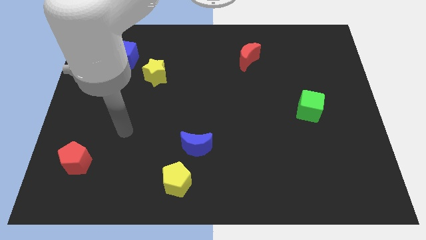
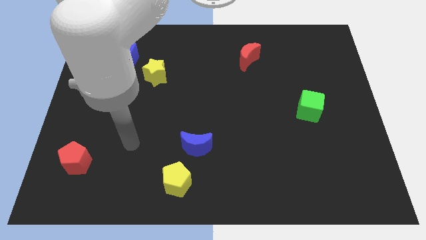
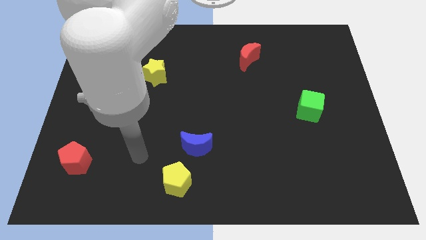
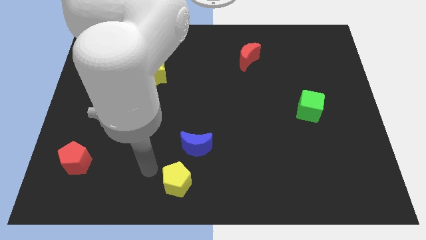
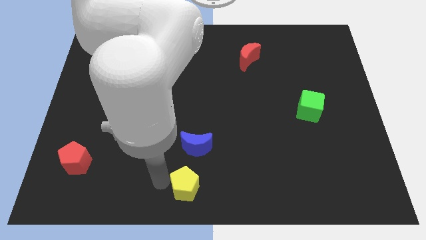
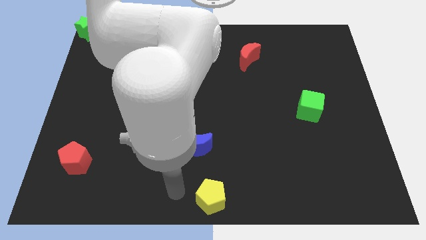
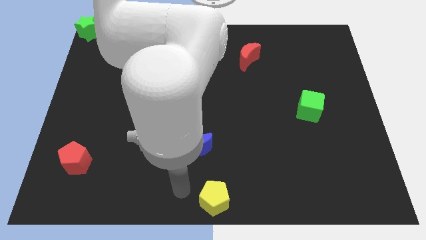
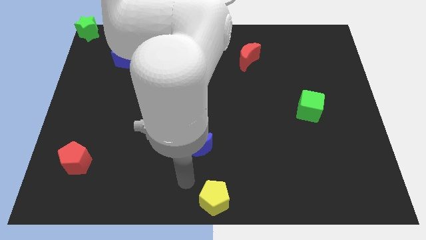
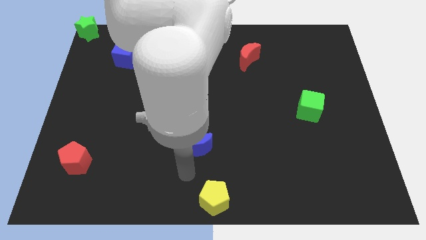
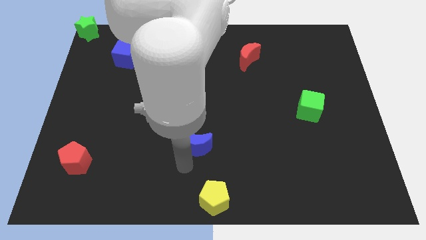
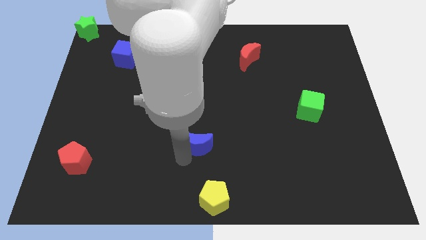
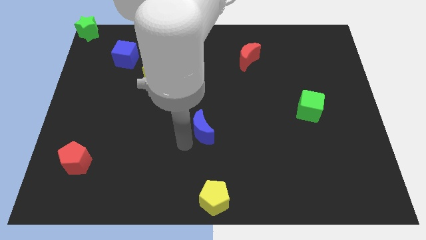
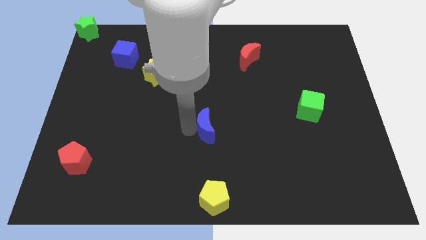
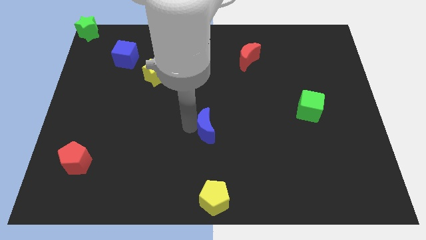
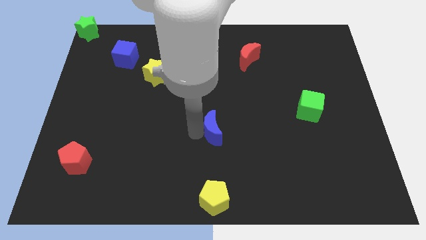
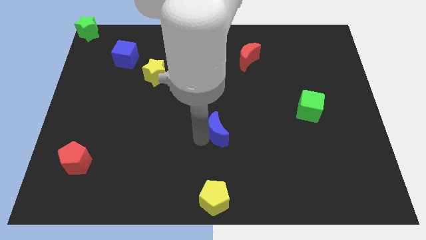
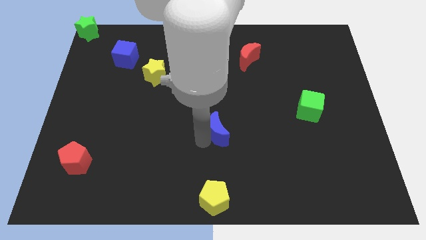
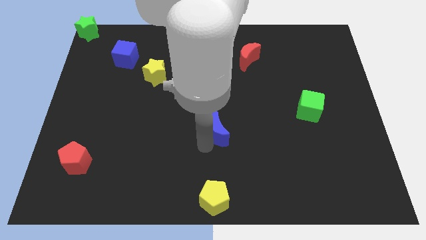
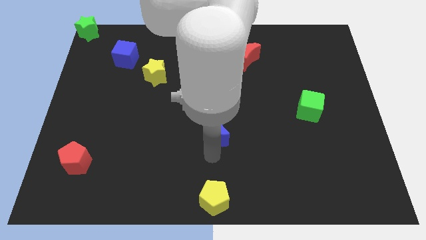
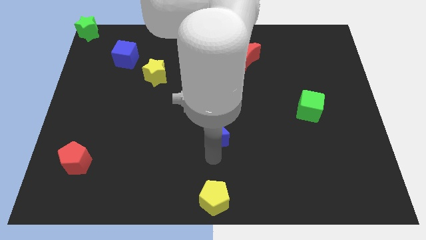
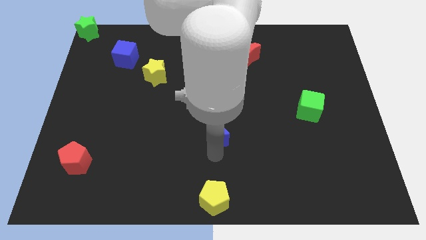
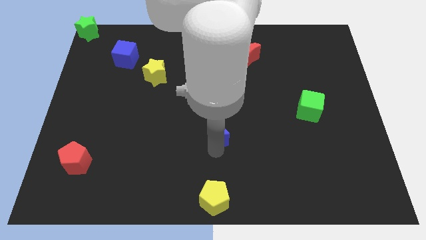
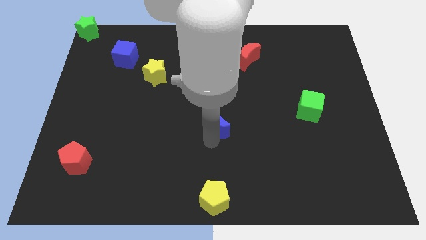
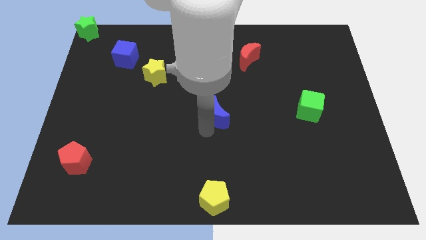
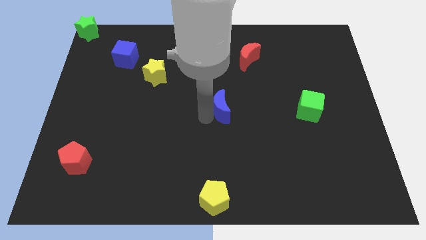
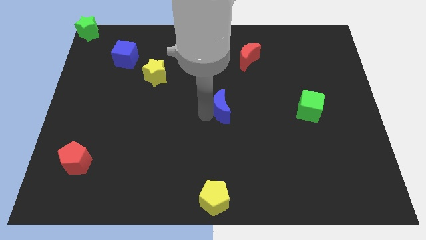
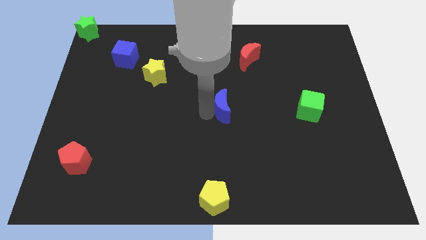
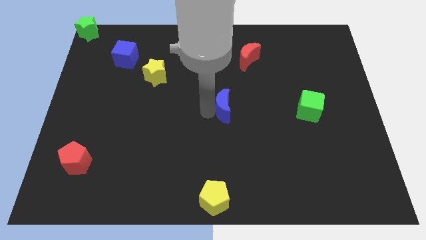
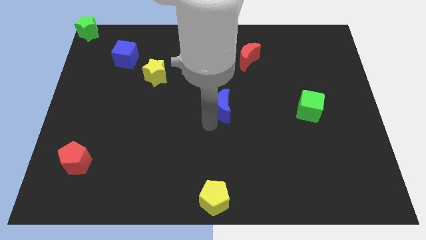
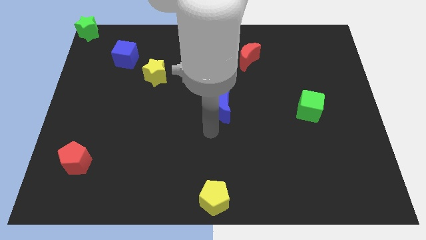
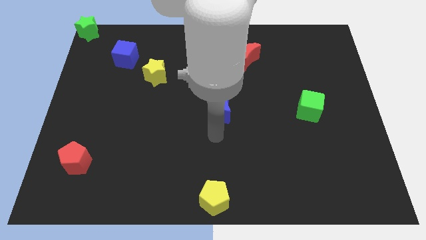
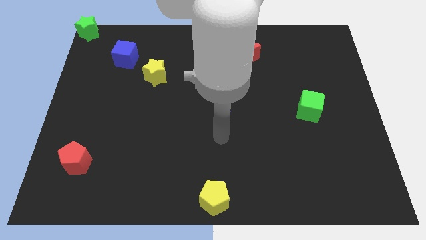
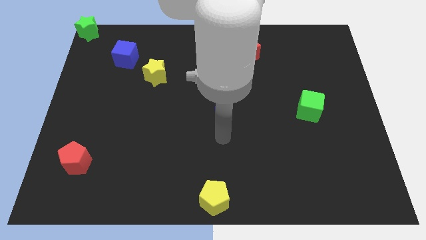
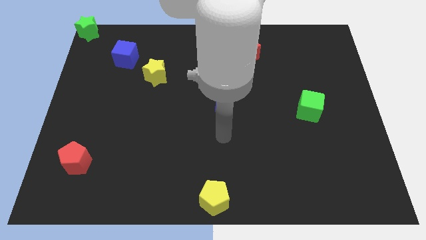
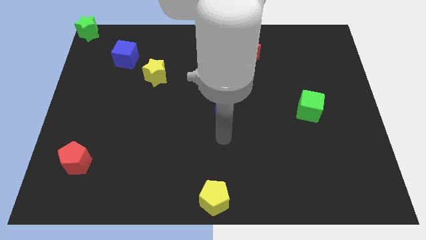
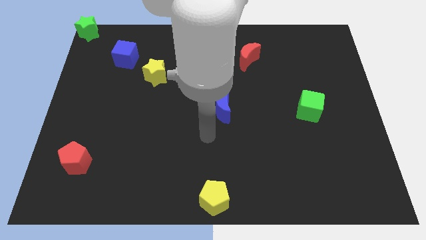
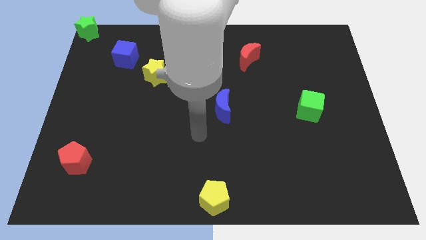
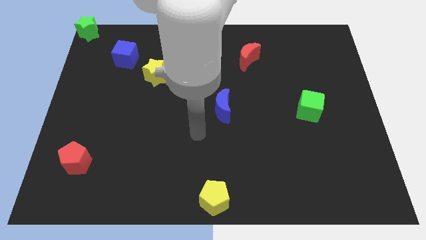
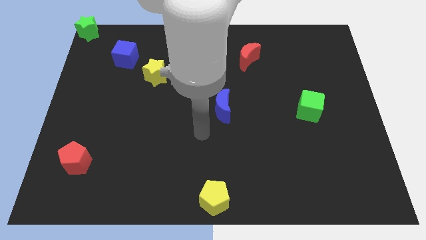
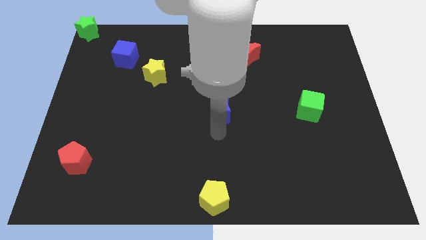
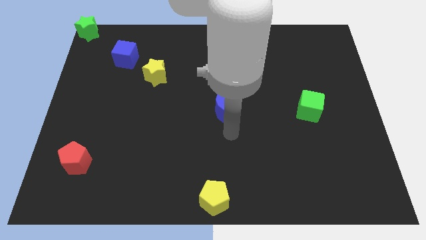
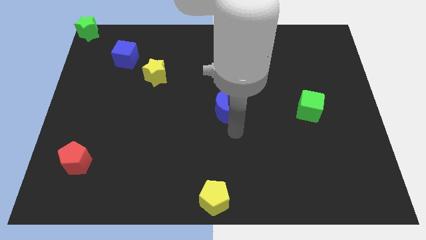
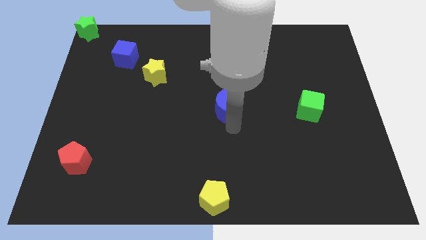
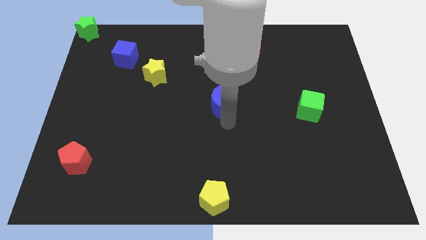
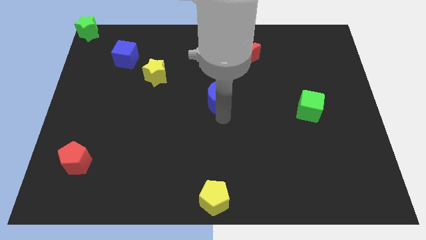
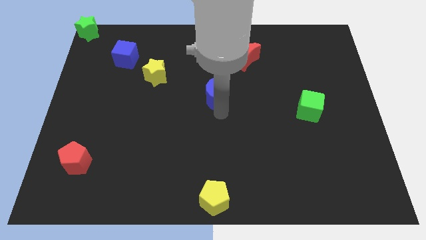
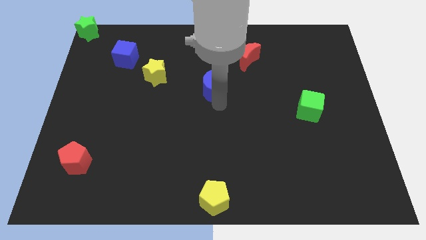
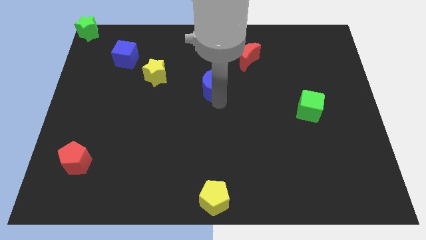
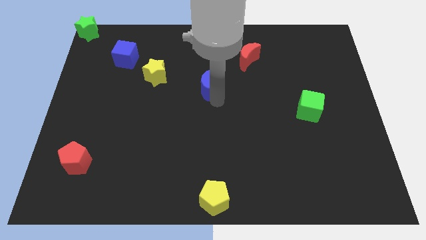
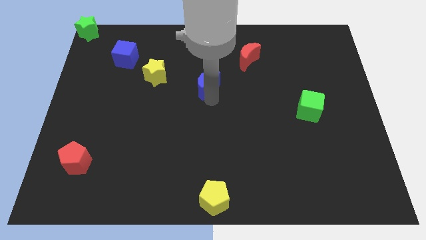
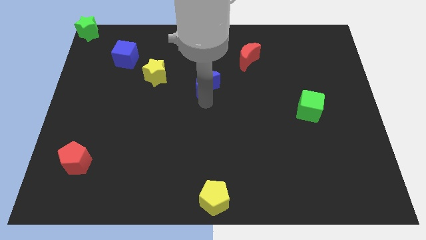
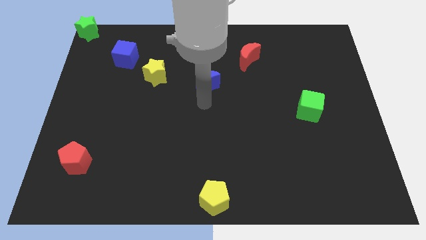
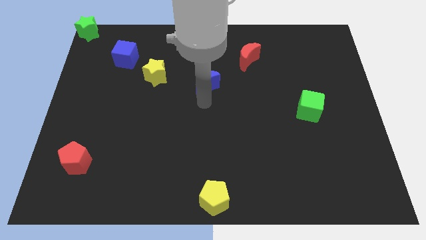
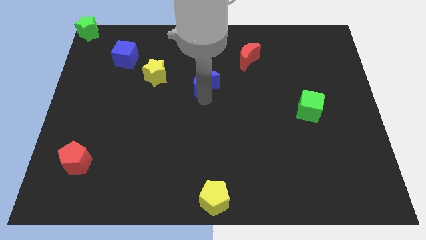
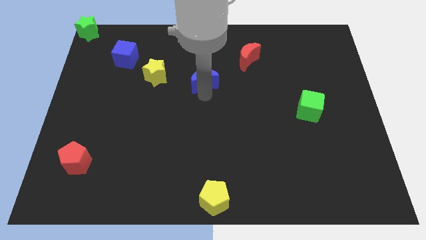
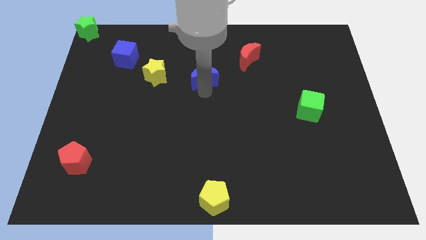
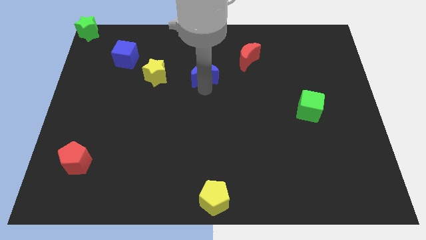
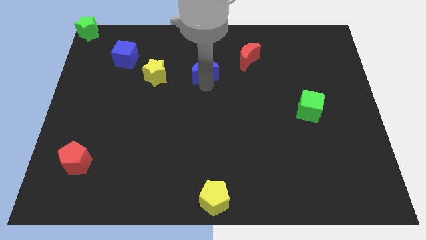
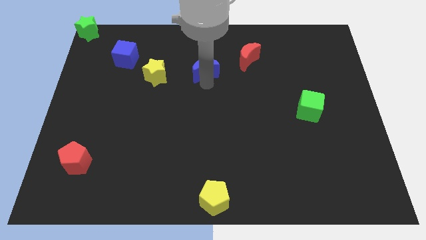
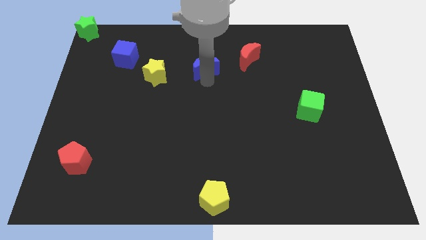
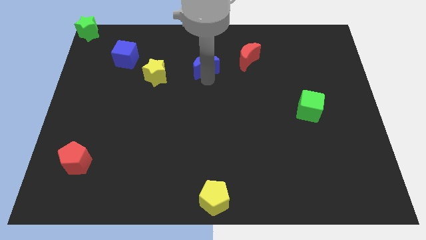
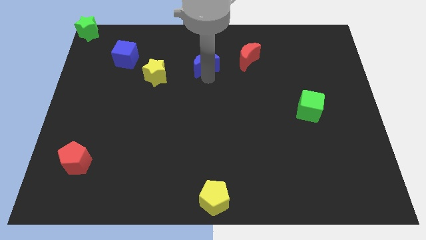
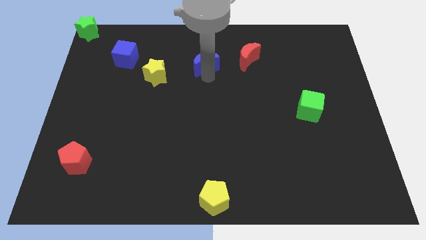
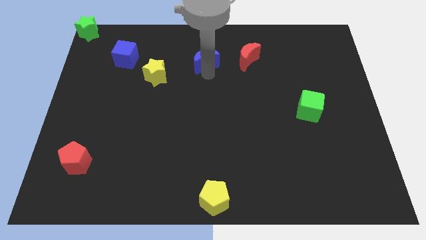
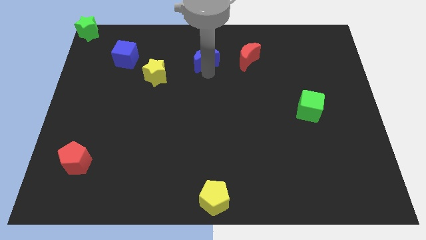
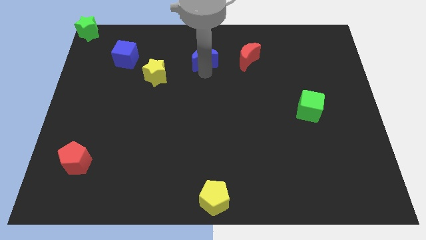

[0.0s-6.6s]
push the blue crescent to the right of the blue cube

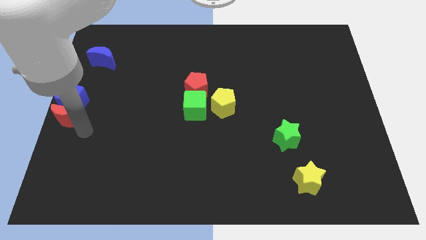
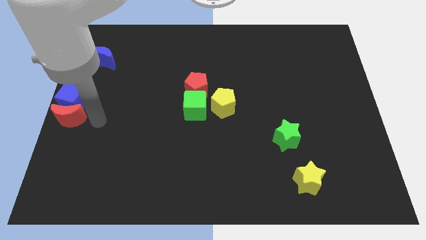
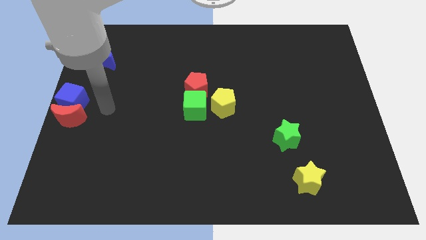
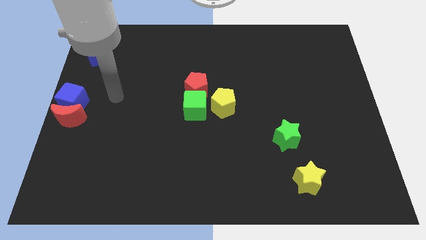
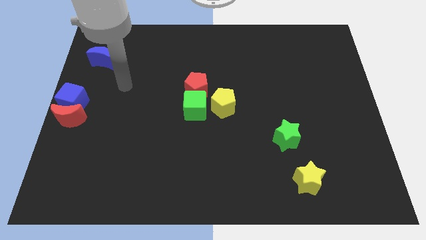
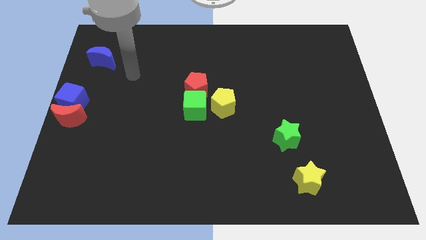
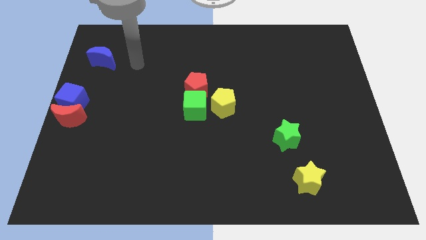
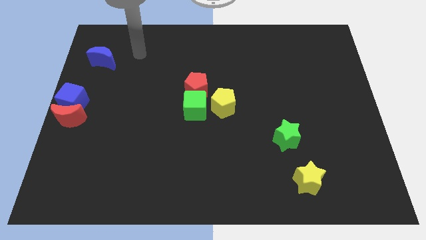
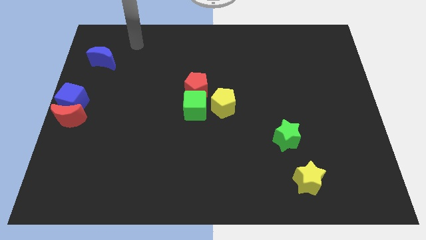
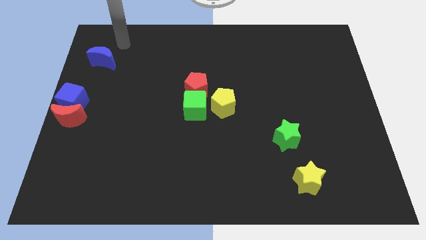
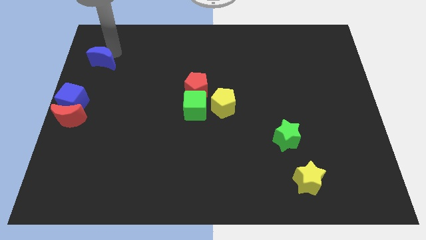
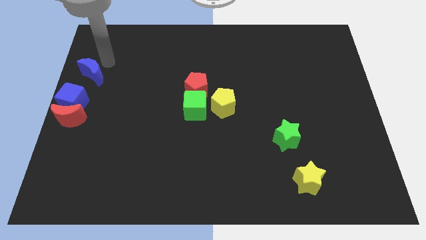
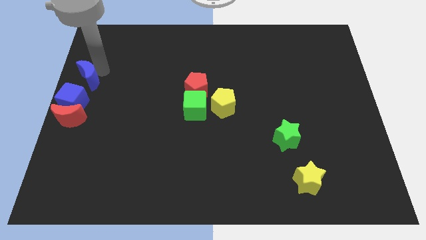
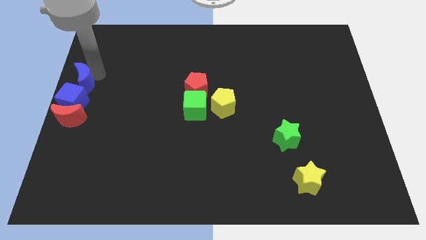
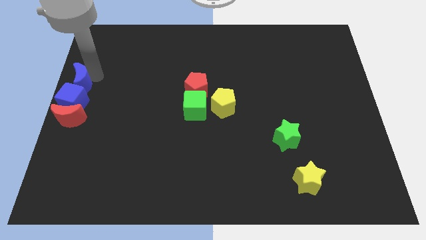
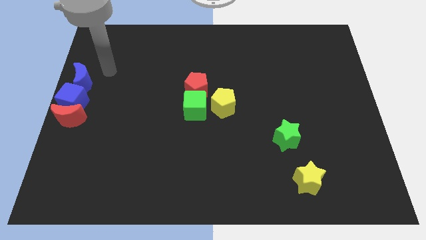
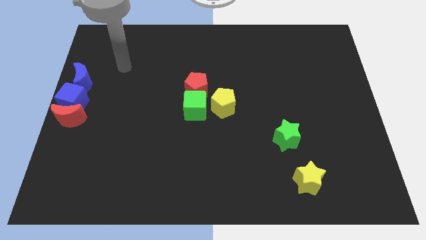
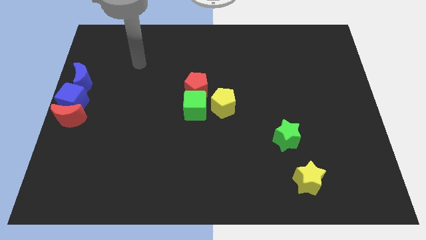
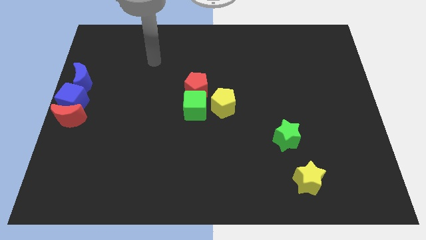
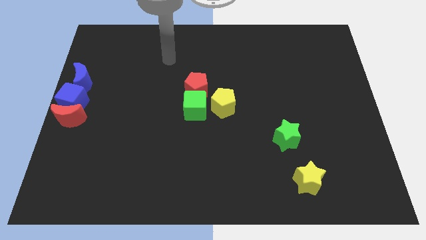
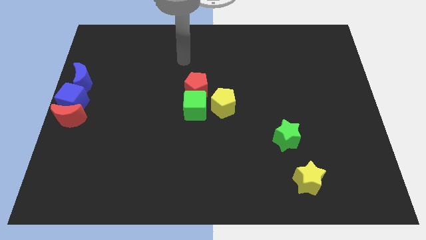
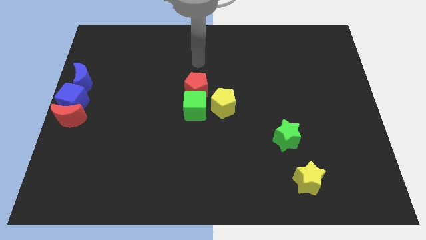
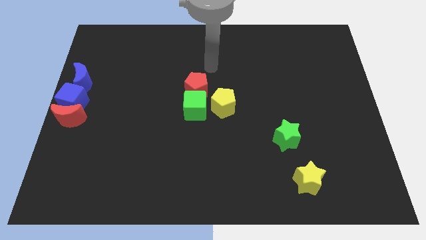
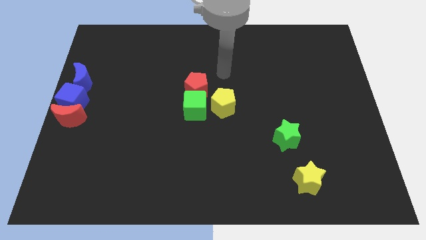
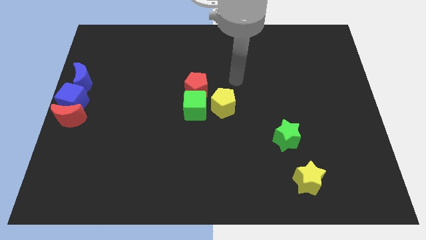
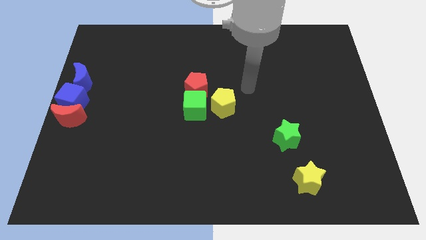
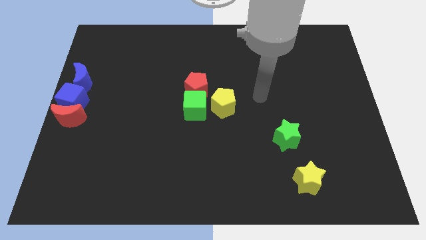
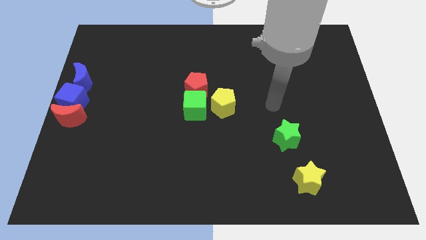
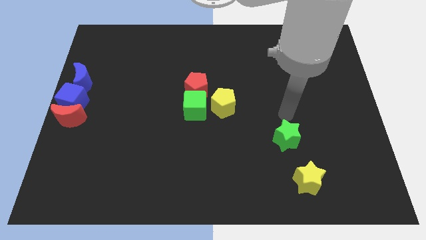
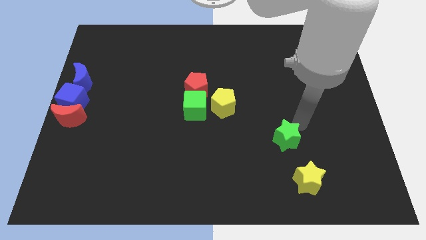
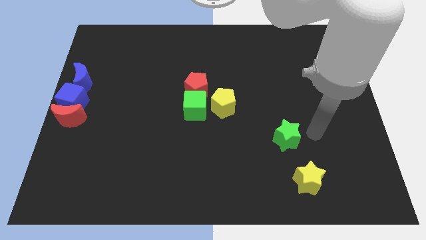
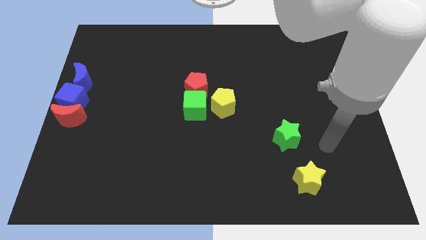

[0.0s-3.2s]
put the blue moon at the center left of the board
